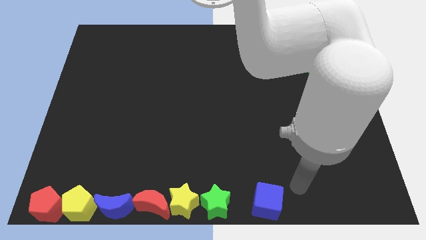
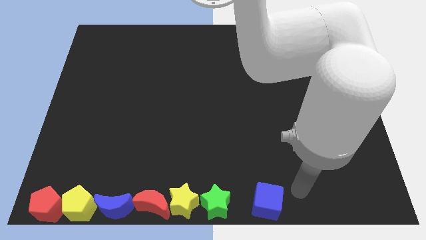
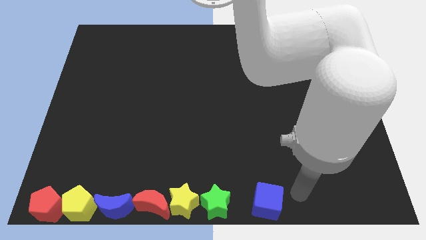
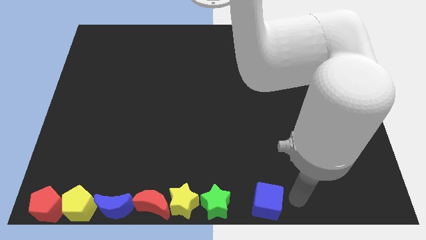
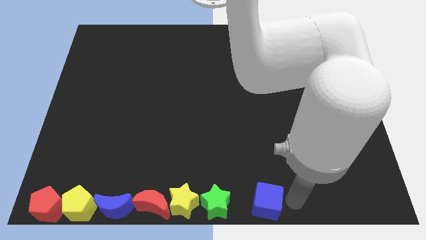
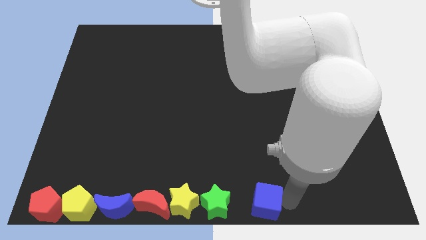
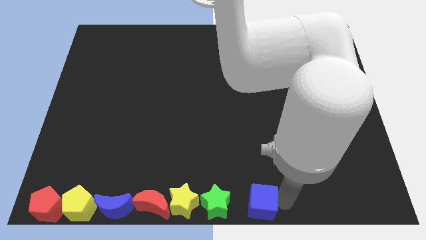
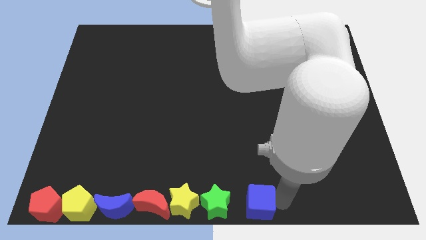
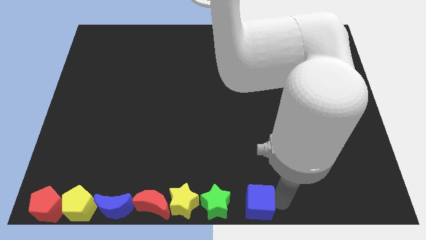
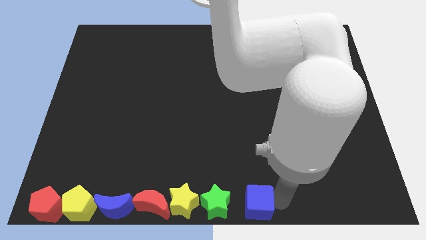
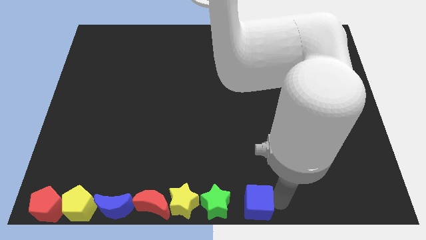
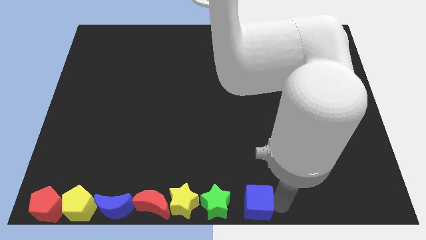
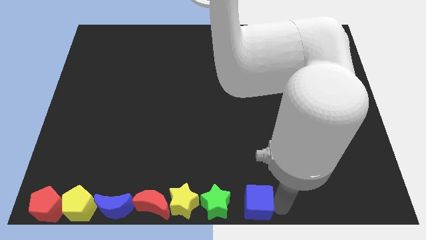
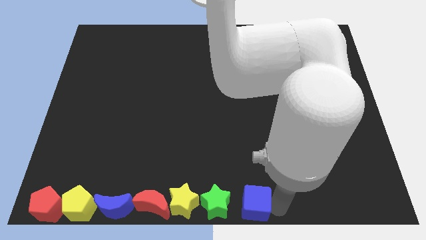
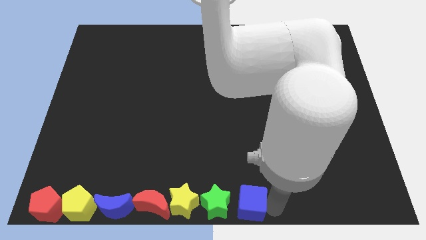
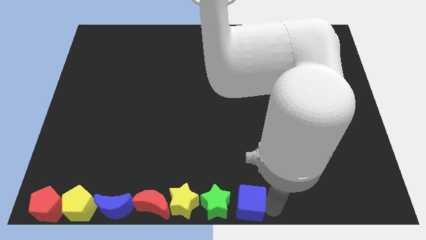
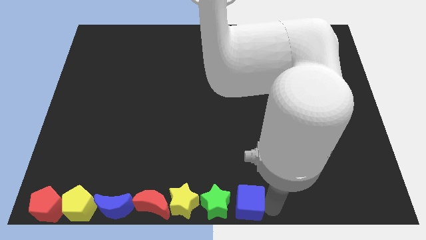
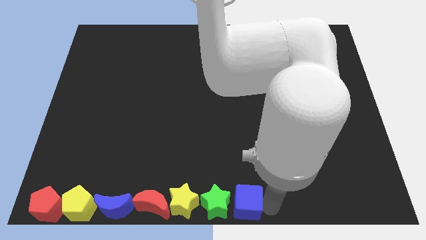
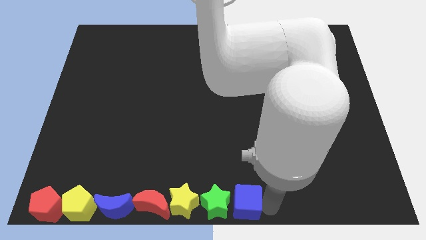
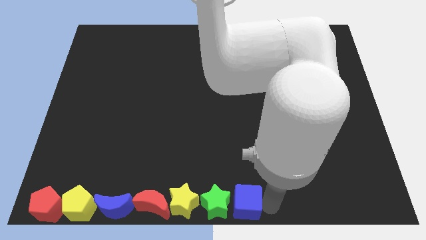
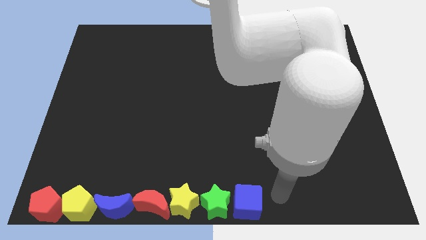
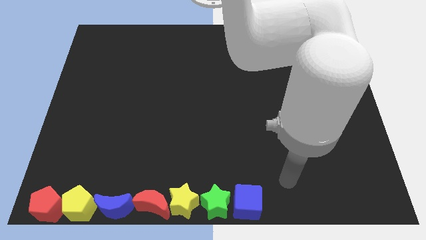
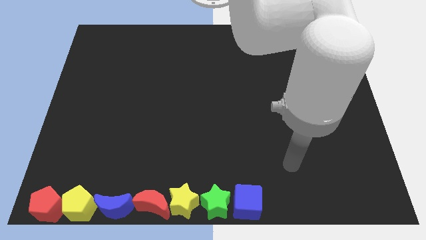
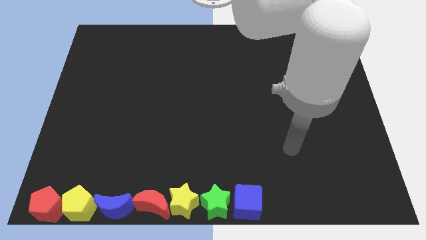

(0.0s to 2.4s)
move the blue cube right beside the green star

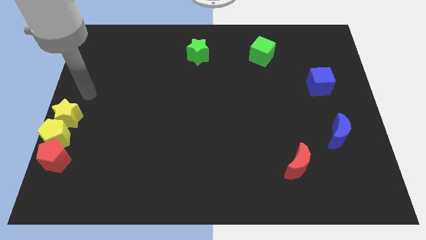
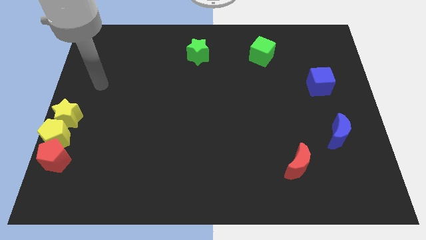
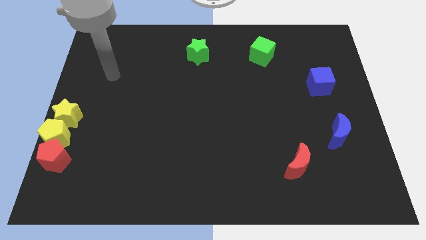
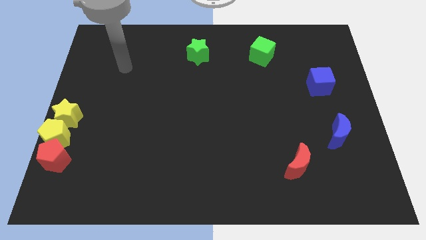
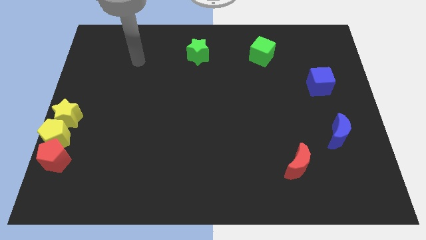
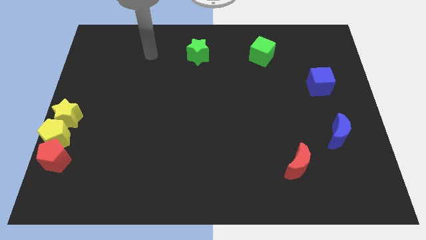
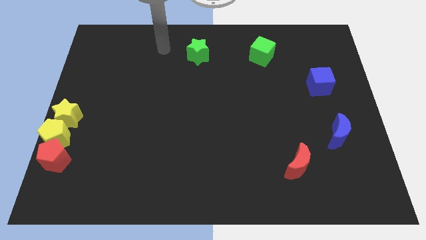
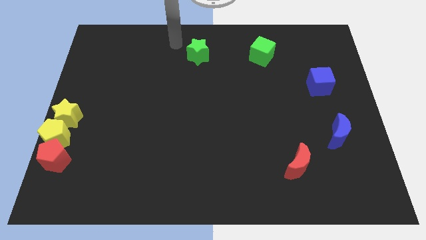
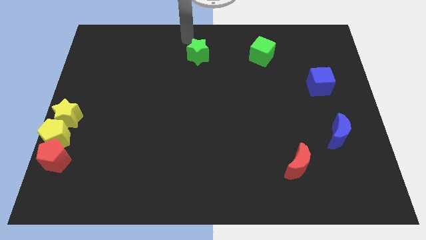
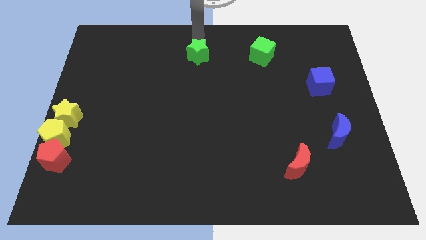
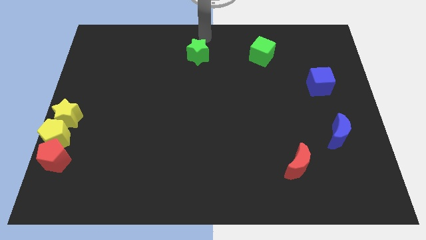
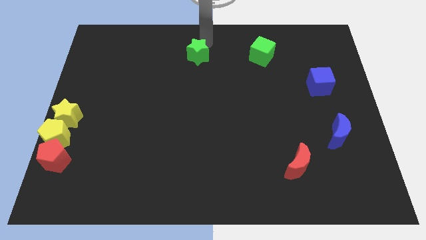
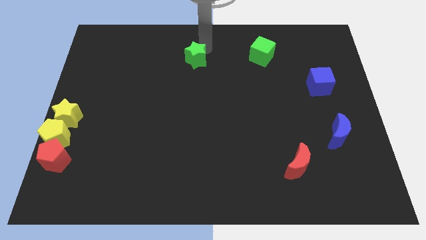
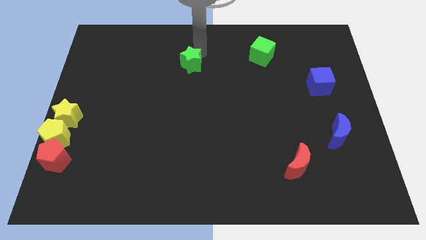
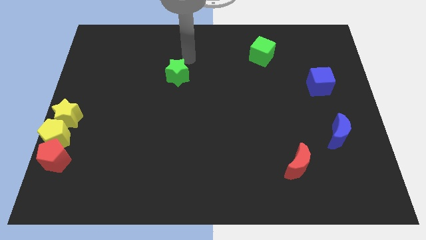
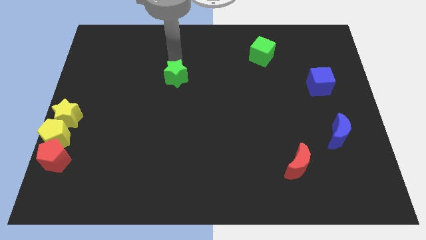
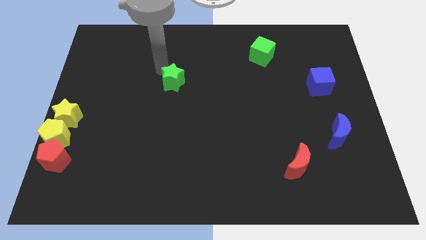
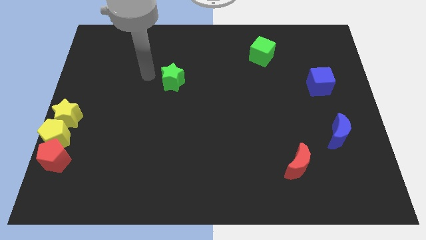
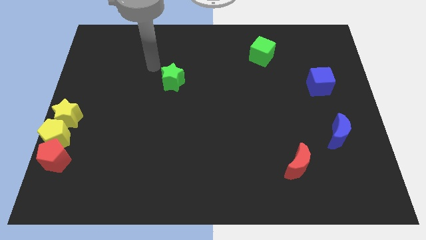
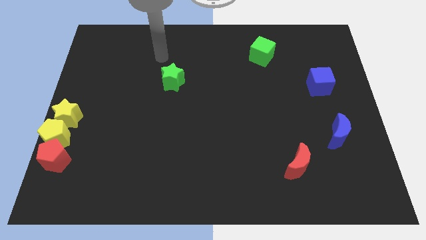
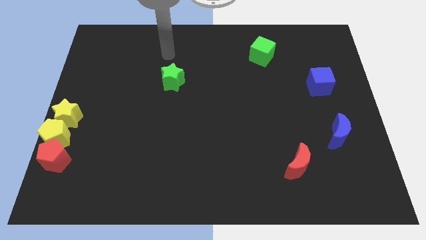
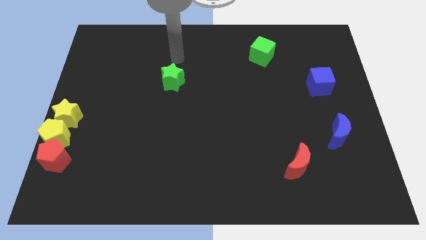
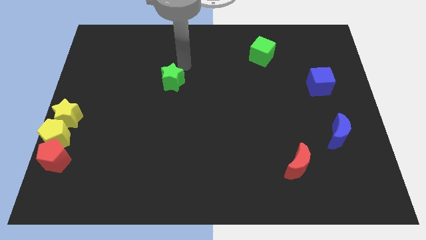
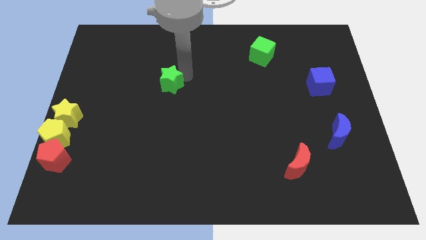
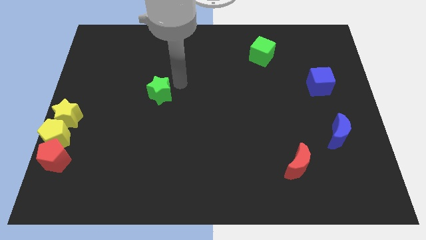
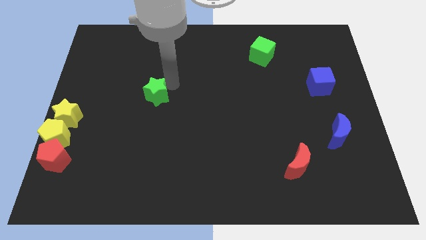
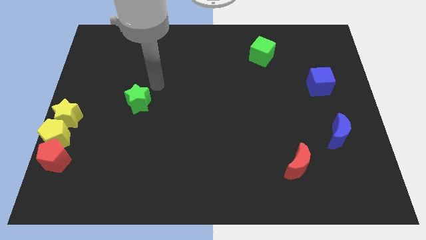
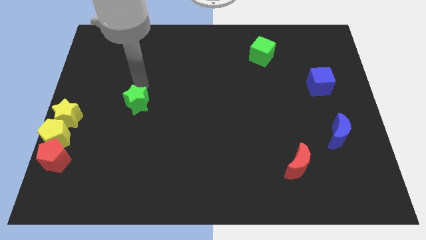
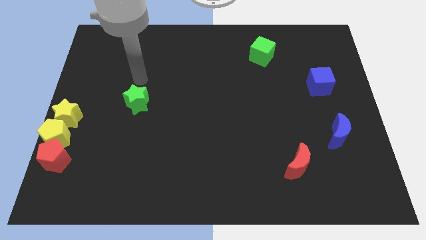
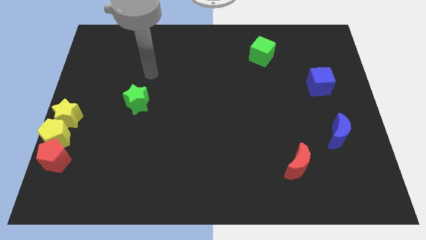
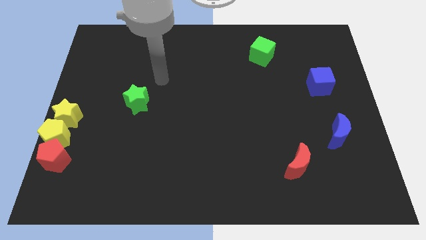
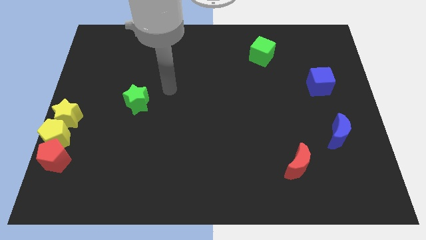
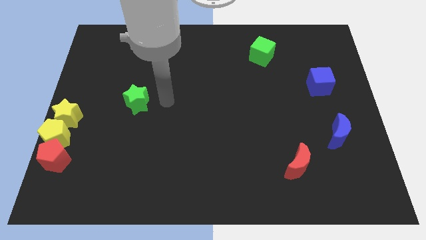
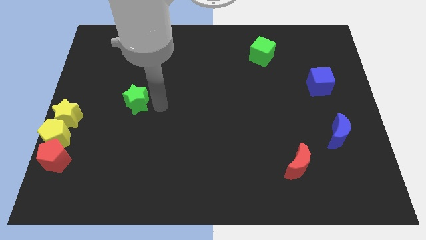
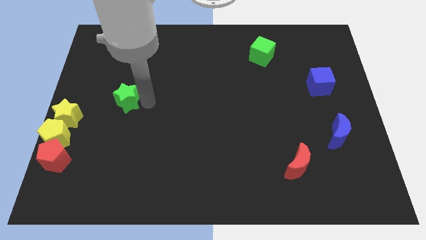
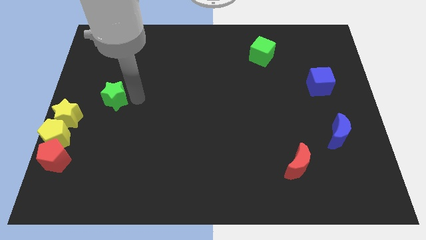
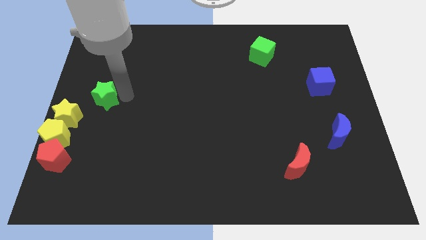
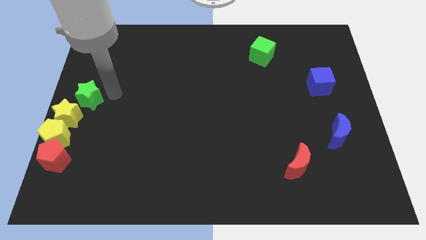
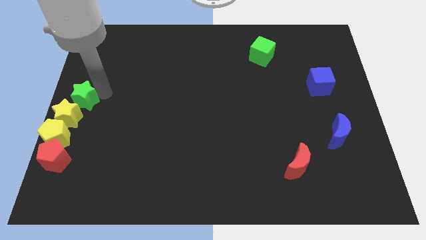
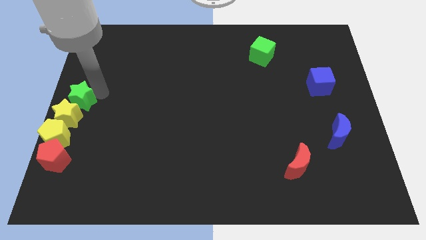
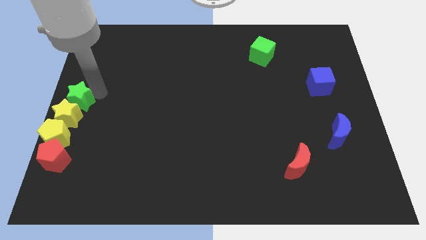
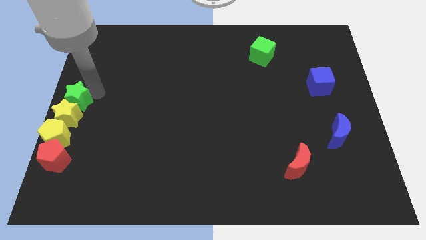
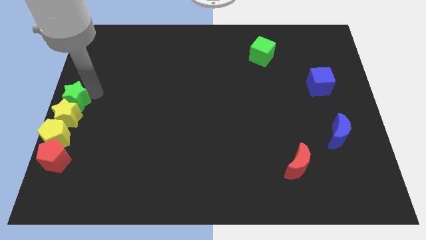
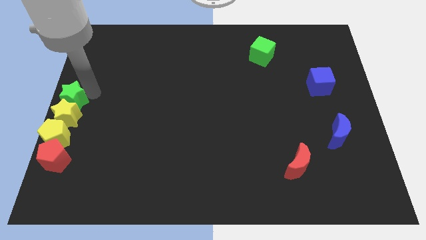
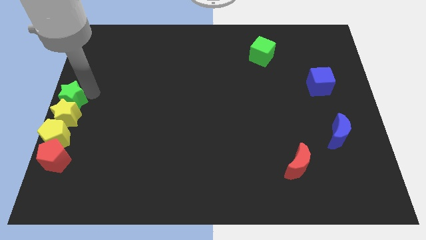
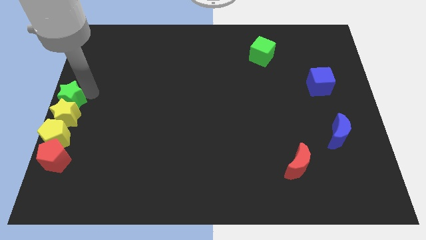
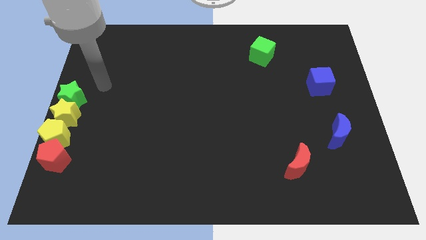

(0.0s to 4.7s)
move green star to the top of yellow star

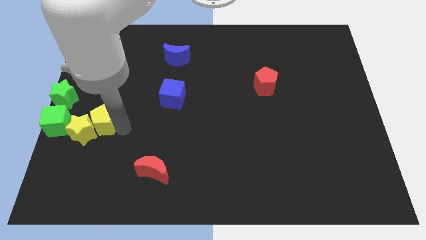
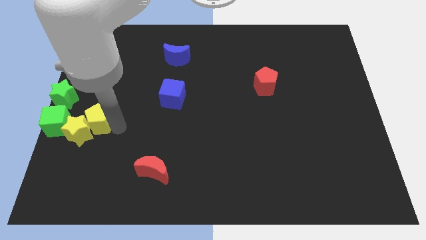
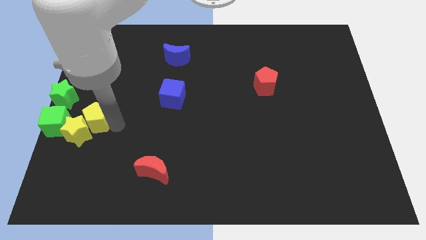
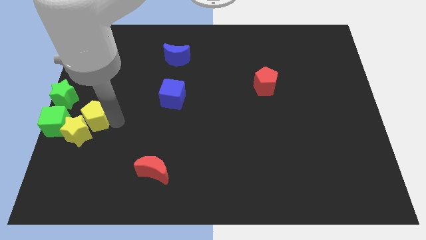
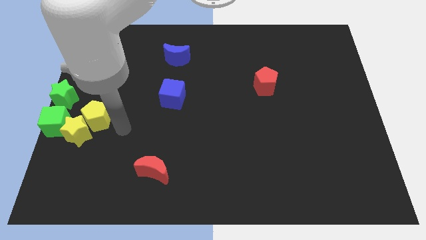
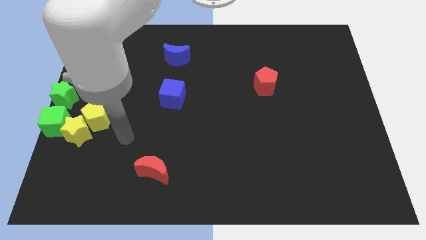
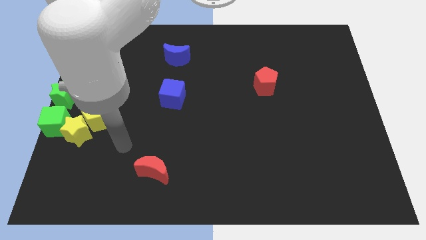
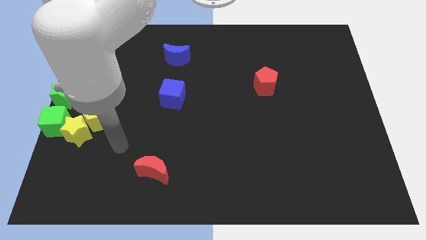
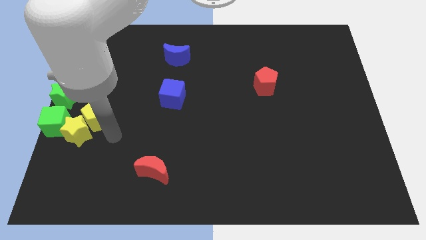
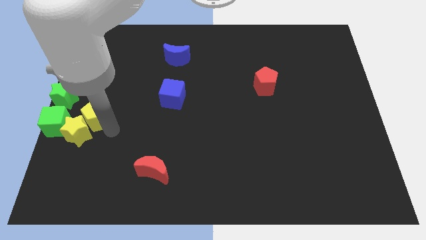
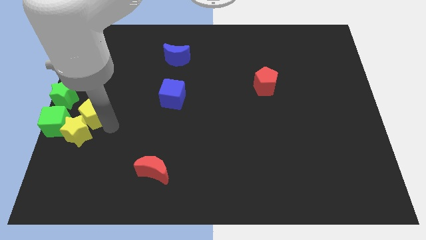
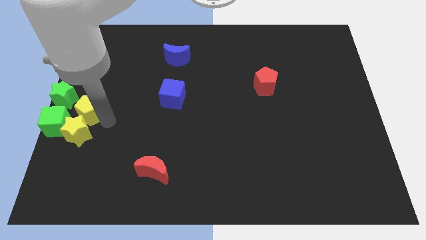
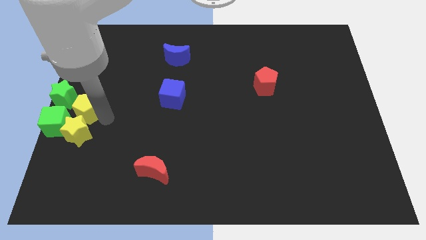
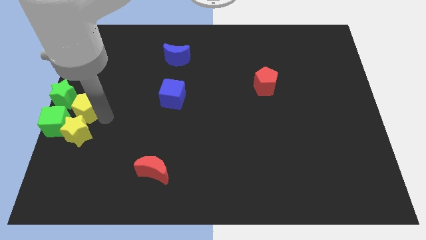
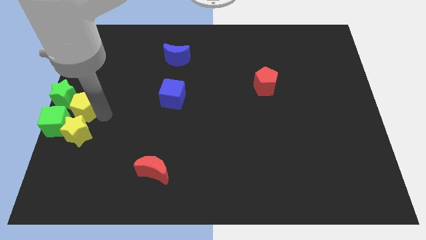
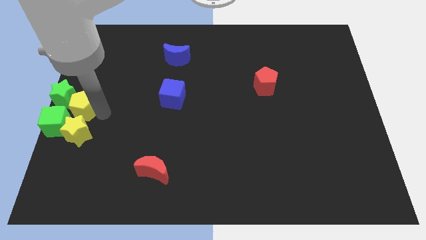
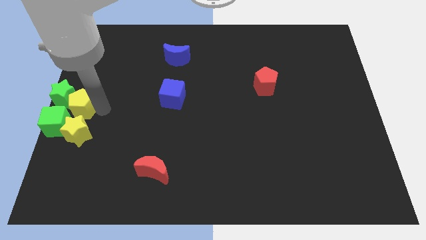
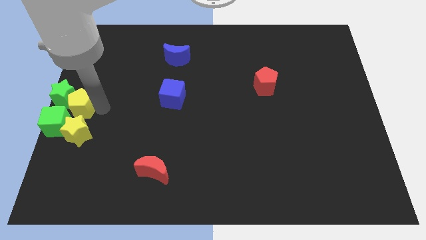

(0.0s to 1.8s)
group up the yellow blocks with the green blocks at the center left of the table
